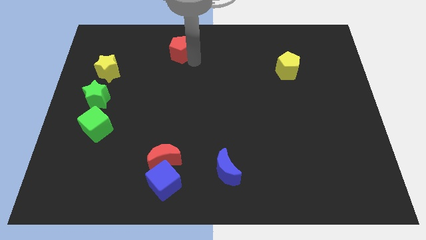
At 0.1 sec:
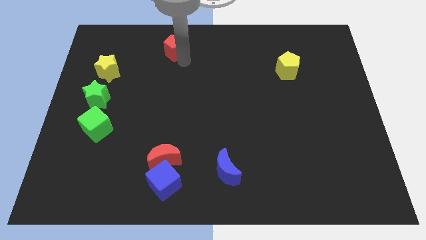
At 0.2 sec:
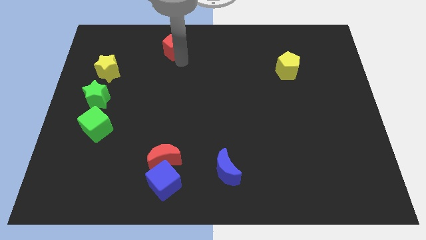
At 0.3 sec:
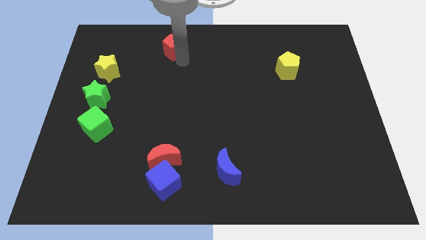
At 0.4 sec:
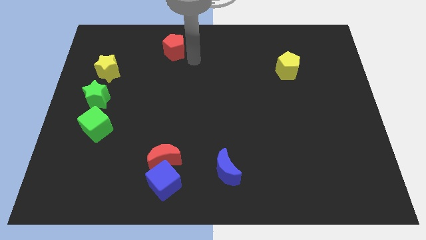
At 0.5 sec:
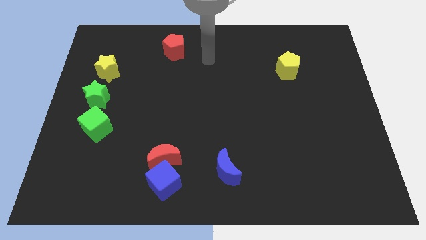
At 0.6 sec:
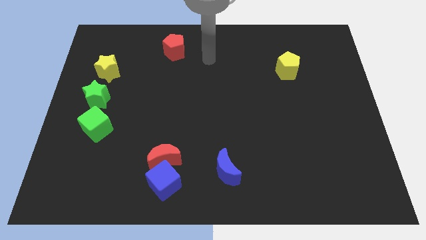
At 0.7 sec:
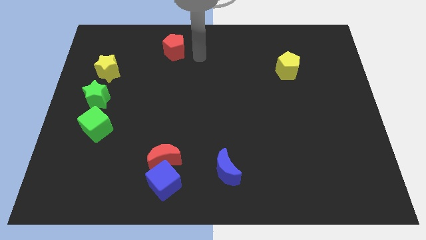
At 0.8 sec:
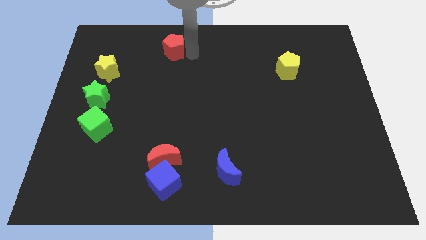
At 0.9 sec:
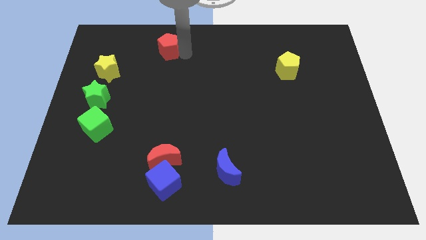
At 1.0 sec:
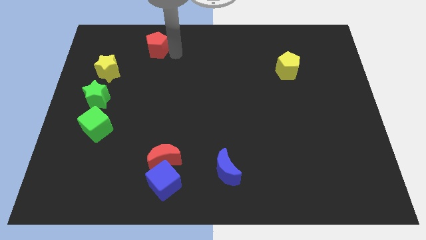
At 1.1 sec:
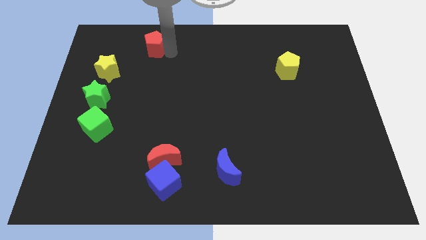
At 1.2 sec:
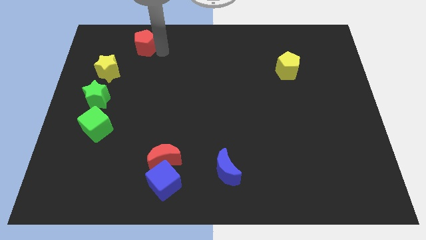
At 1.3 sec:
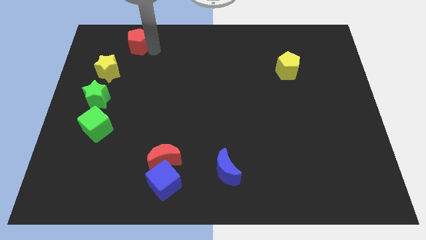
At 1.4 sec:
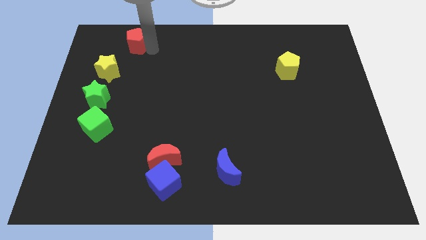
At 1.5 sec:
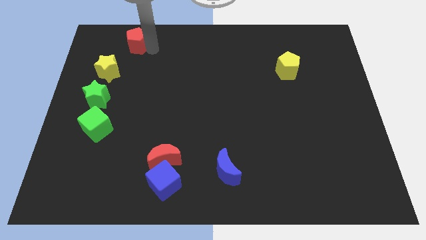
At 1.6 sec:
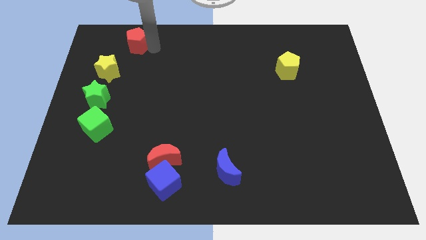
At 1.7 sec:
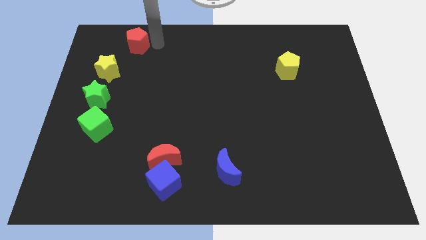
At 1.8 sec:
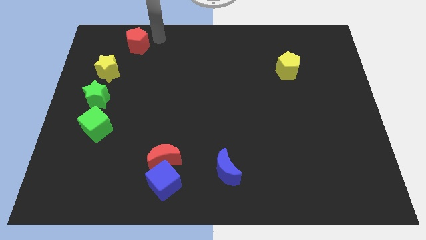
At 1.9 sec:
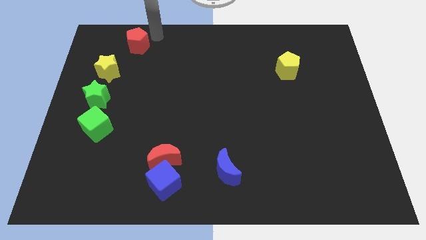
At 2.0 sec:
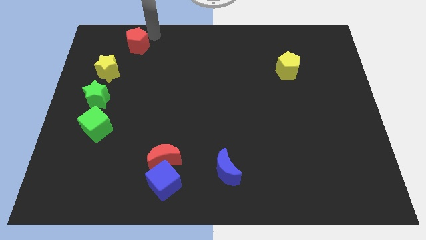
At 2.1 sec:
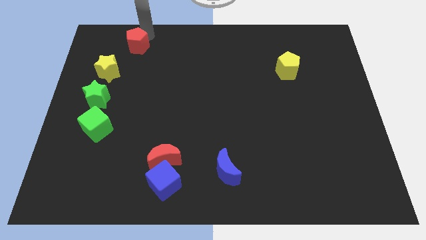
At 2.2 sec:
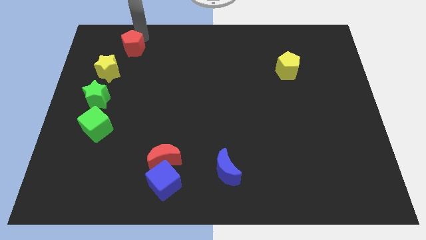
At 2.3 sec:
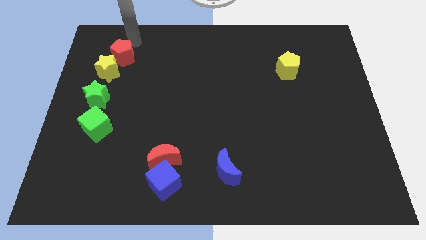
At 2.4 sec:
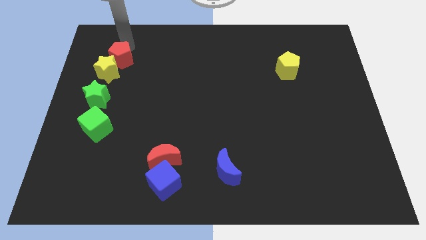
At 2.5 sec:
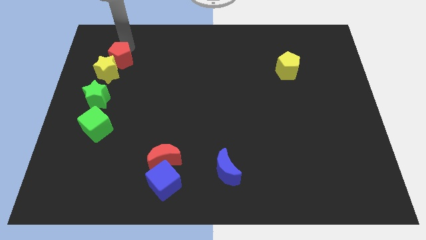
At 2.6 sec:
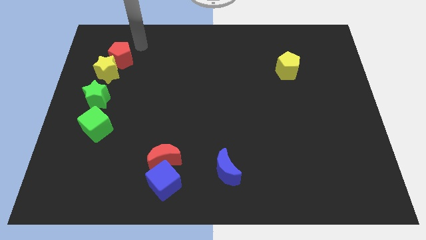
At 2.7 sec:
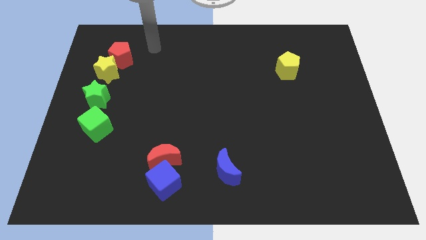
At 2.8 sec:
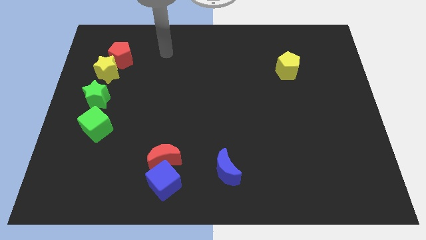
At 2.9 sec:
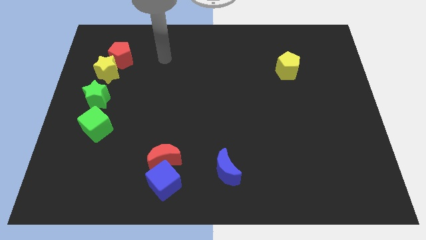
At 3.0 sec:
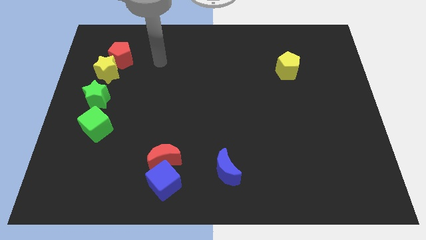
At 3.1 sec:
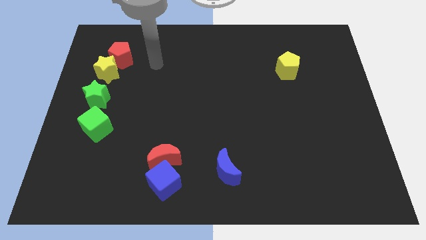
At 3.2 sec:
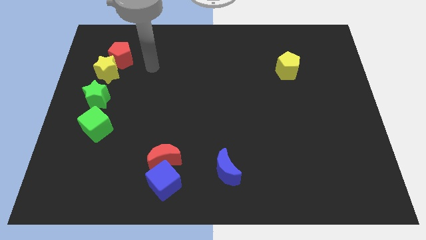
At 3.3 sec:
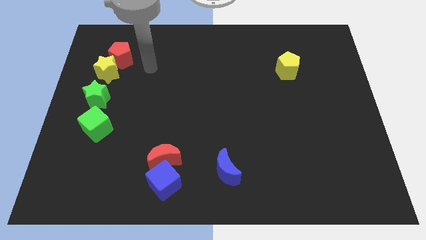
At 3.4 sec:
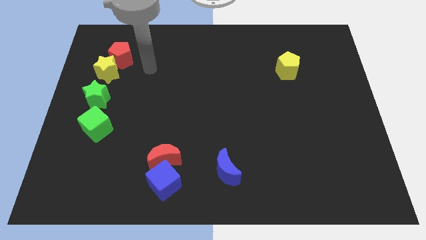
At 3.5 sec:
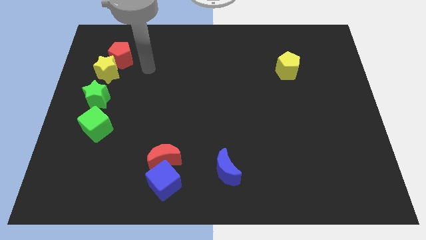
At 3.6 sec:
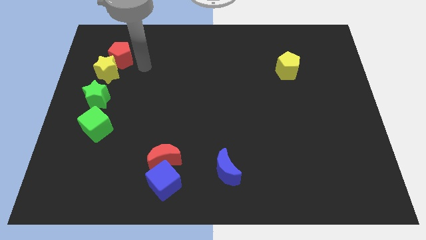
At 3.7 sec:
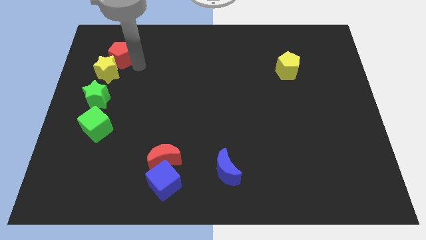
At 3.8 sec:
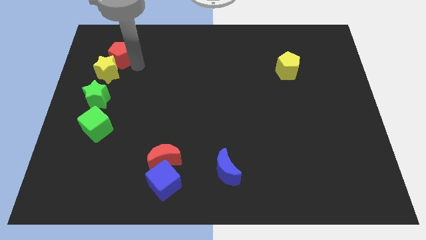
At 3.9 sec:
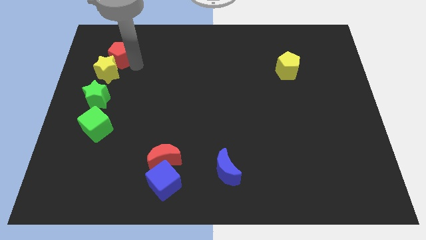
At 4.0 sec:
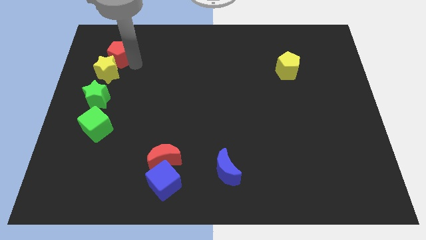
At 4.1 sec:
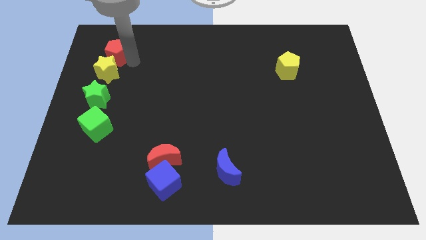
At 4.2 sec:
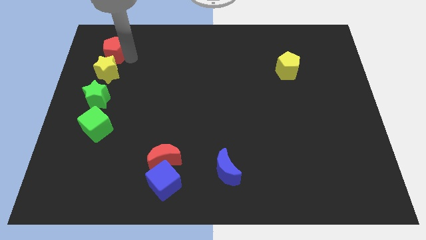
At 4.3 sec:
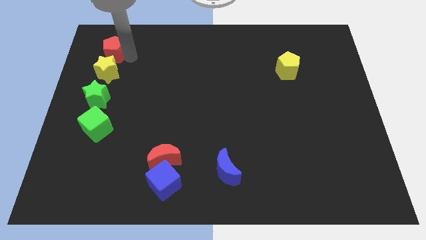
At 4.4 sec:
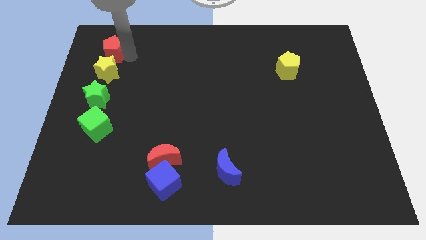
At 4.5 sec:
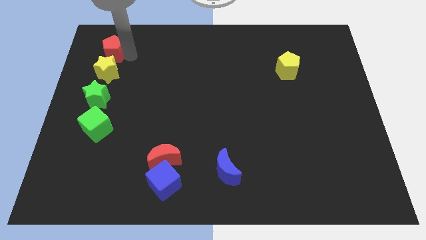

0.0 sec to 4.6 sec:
push the red pentagon into the yellow star

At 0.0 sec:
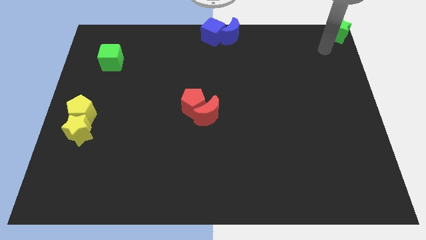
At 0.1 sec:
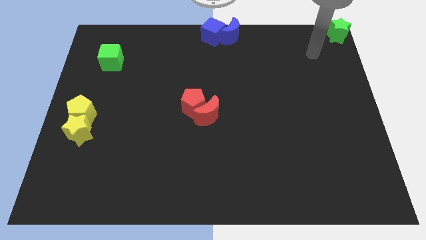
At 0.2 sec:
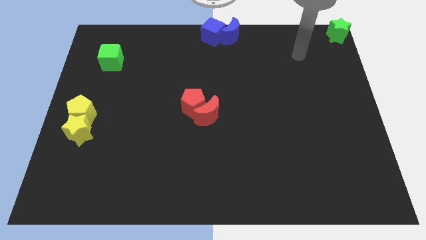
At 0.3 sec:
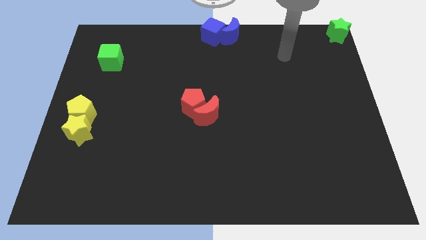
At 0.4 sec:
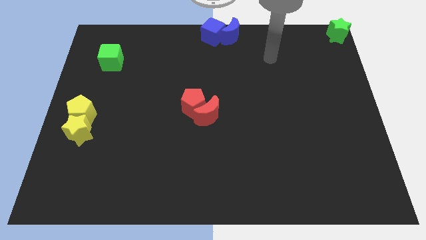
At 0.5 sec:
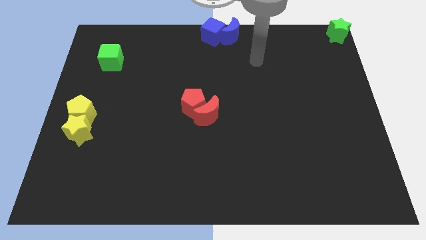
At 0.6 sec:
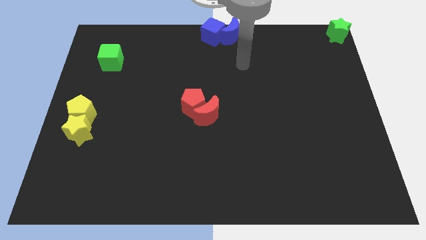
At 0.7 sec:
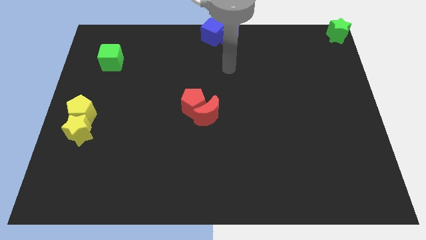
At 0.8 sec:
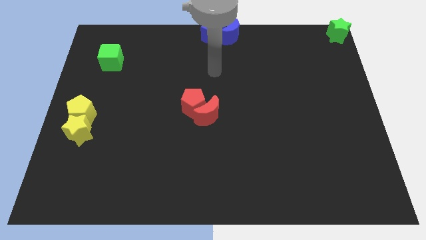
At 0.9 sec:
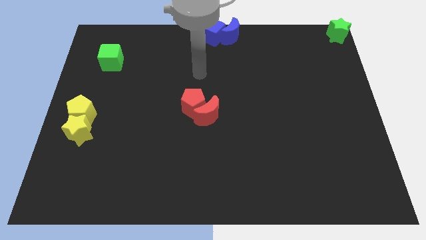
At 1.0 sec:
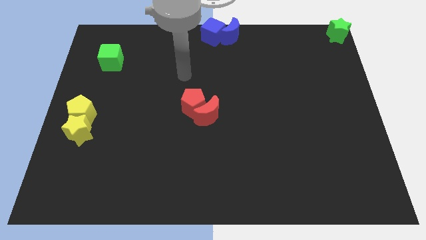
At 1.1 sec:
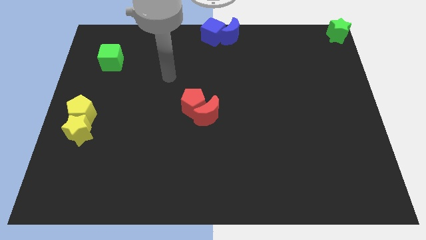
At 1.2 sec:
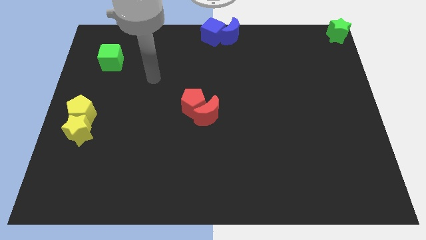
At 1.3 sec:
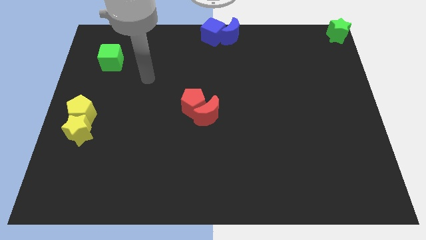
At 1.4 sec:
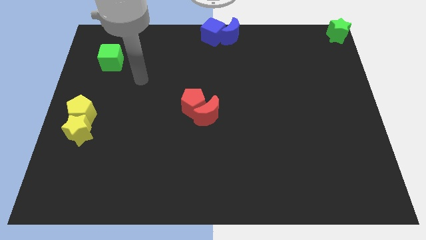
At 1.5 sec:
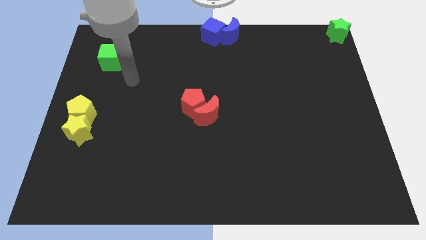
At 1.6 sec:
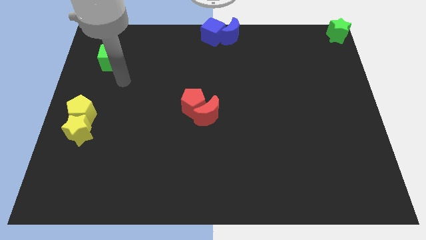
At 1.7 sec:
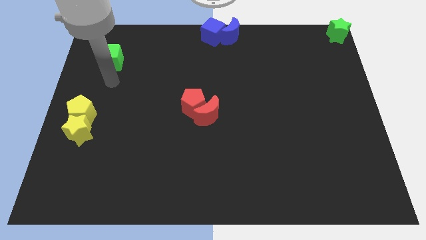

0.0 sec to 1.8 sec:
move your arm towards the green cube

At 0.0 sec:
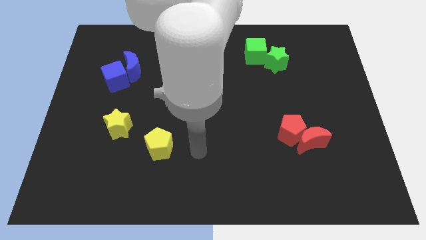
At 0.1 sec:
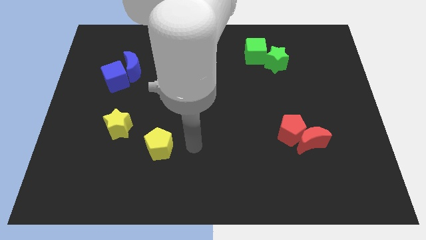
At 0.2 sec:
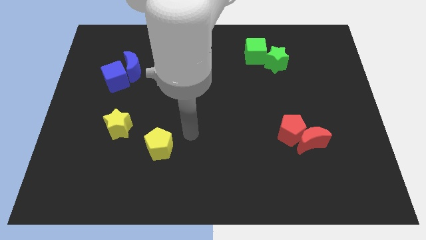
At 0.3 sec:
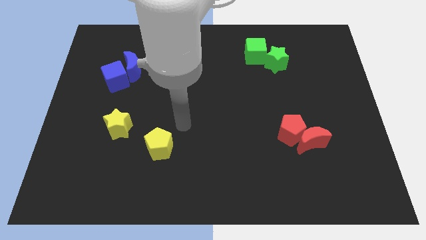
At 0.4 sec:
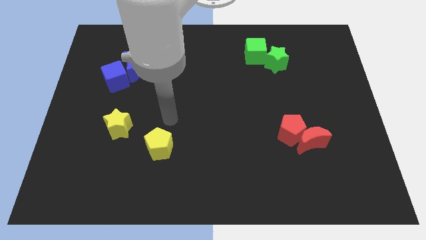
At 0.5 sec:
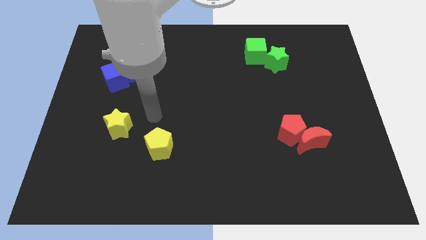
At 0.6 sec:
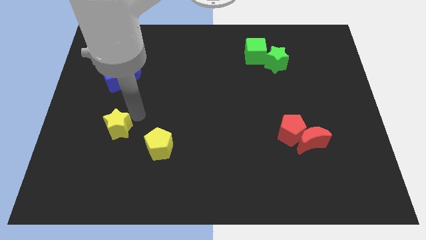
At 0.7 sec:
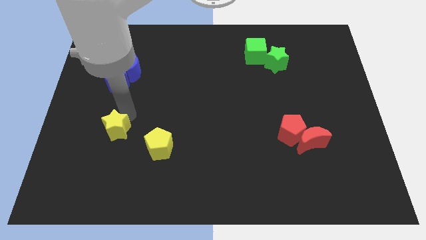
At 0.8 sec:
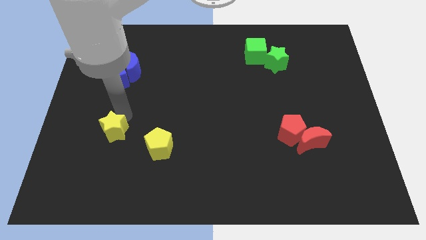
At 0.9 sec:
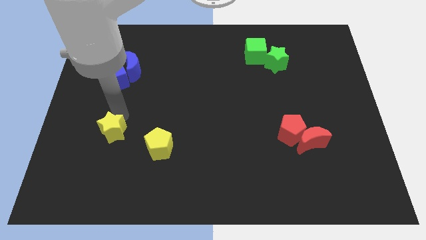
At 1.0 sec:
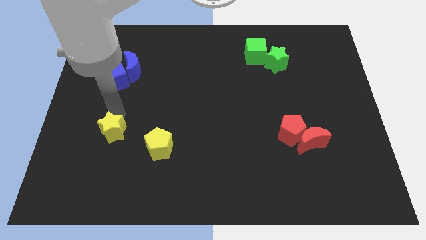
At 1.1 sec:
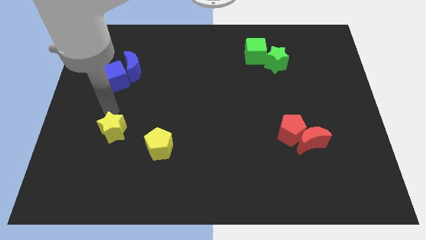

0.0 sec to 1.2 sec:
place arm on the top of yellow star

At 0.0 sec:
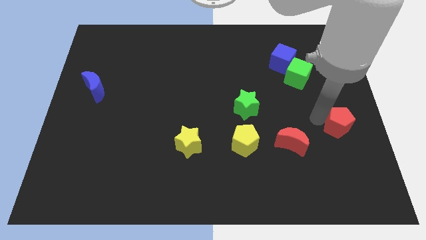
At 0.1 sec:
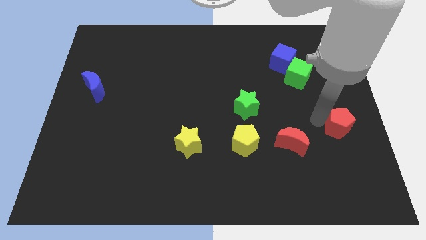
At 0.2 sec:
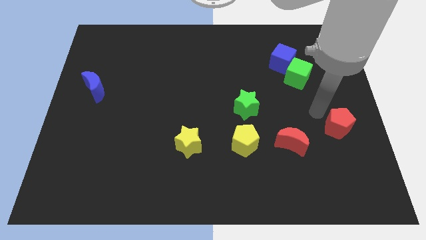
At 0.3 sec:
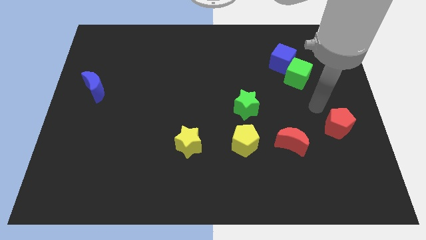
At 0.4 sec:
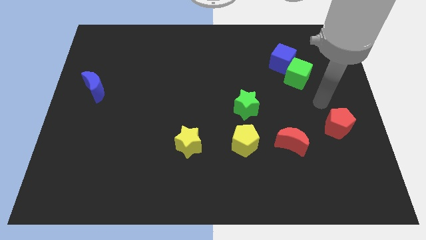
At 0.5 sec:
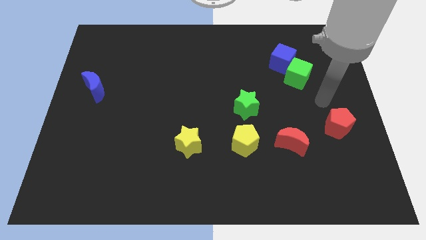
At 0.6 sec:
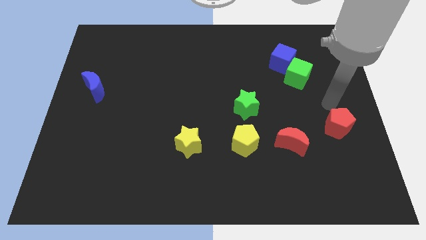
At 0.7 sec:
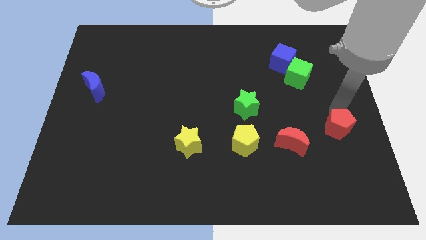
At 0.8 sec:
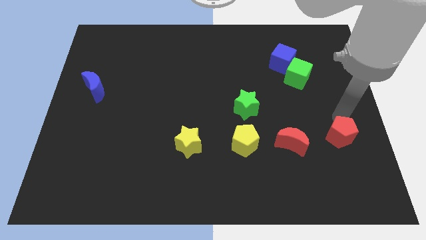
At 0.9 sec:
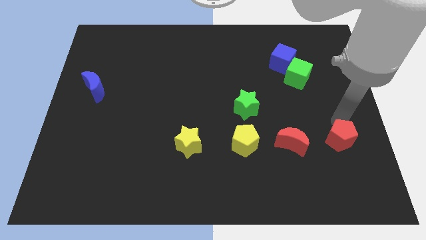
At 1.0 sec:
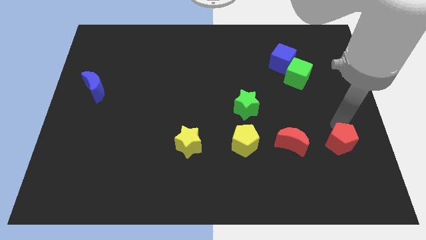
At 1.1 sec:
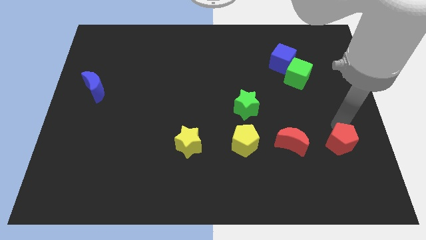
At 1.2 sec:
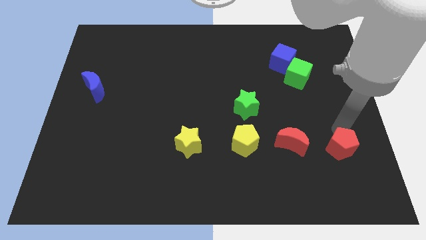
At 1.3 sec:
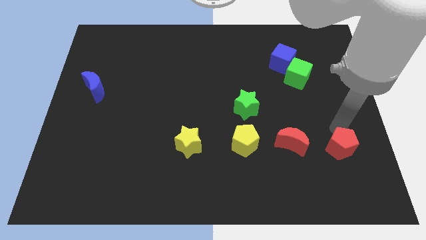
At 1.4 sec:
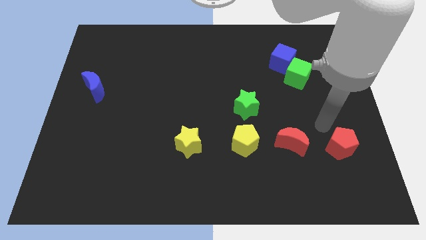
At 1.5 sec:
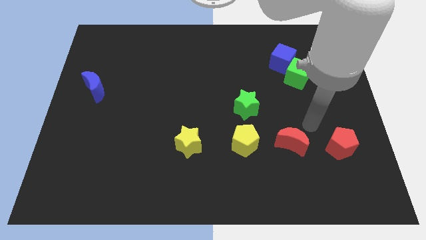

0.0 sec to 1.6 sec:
push the red pentagon right beside the red moon
